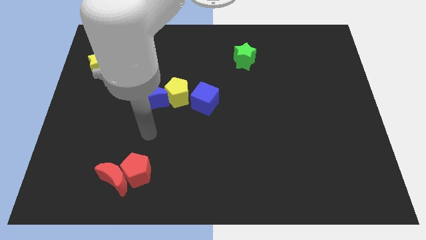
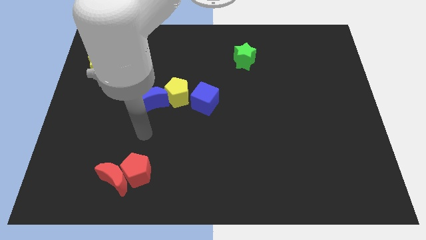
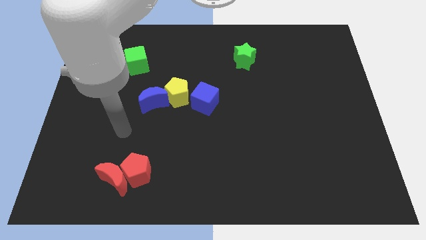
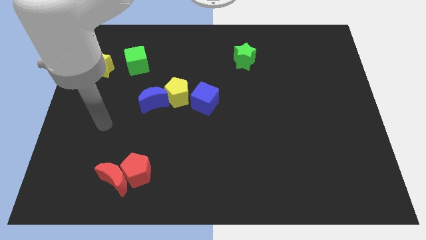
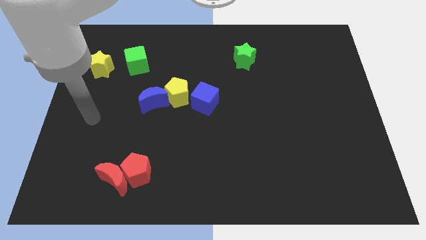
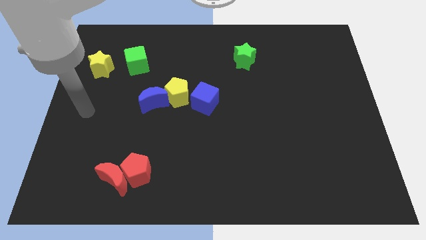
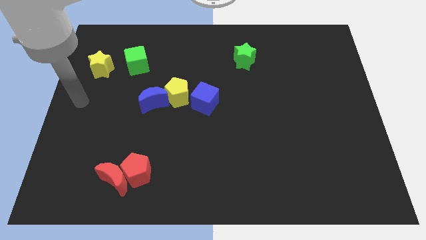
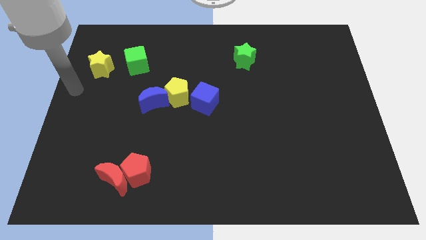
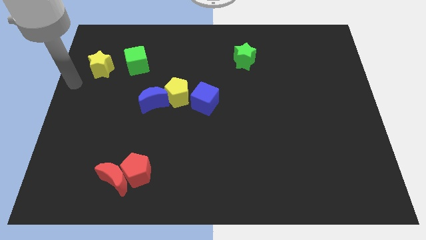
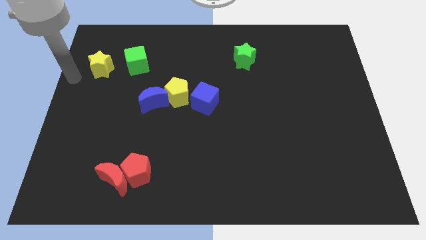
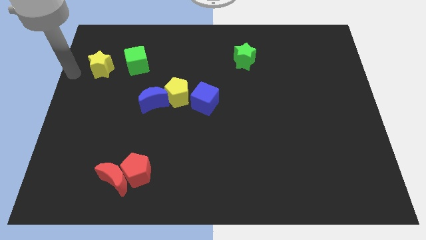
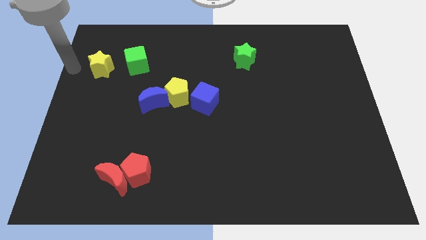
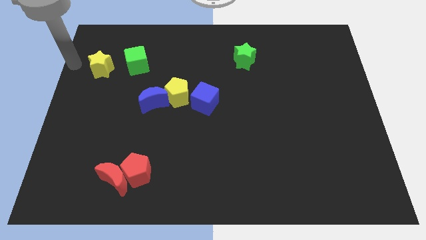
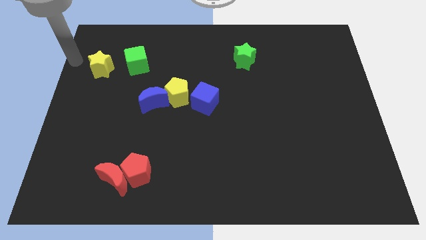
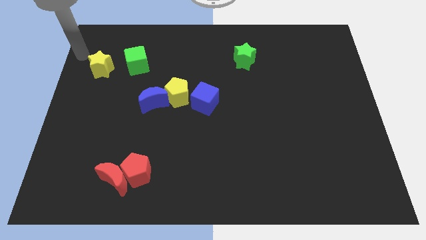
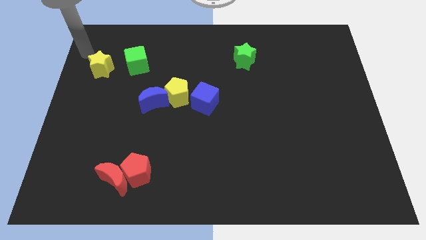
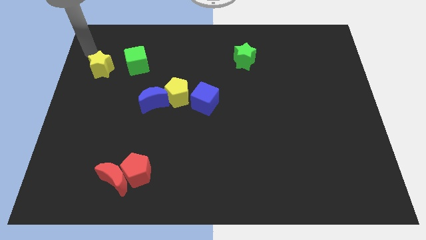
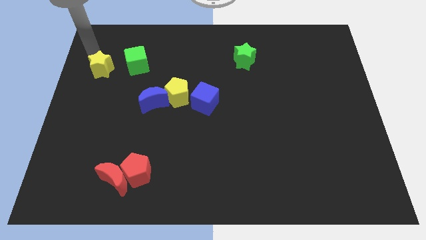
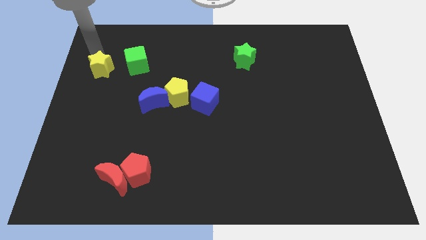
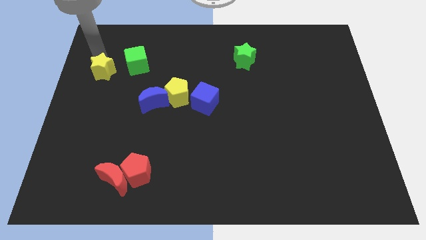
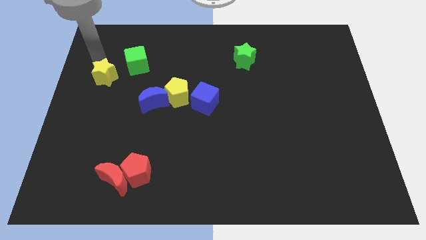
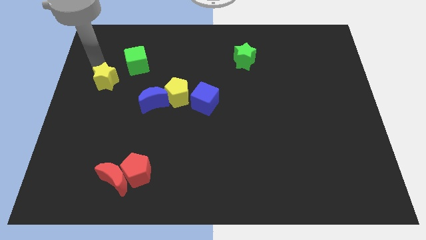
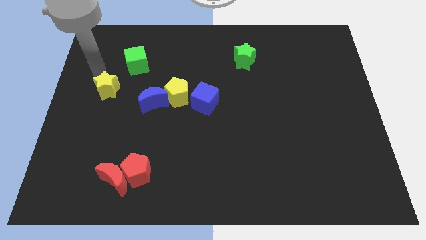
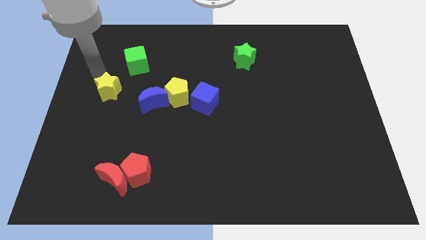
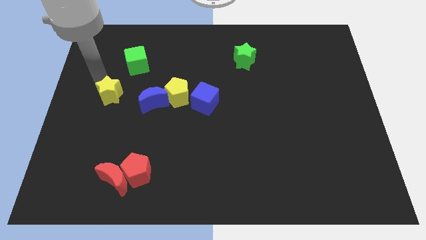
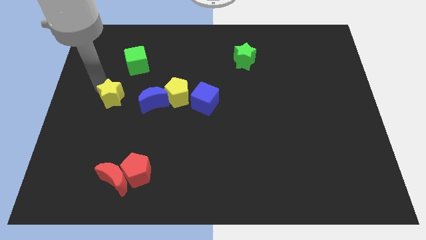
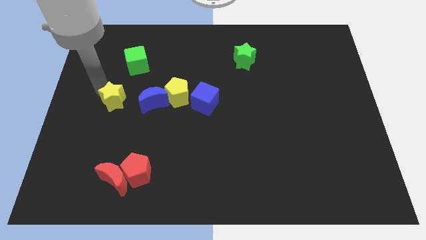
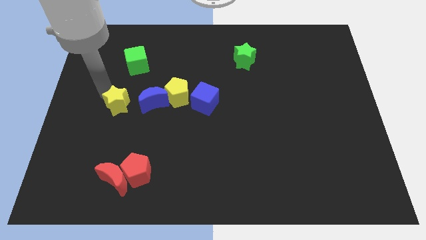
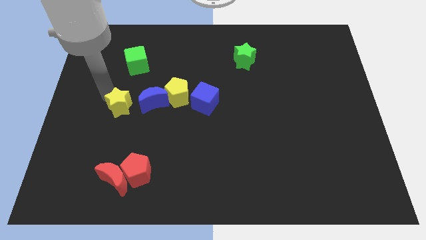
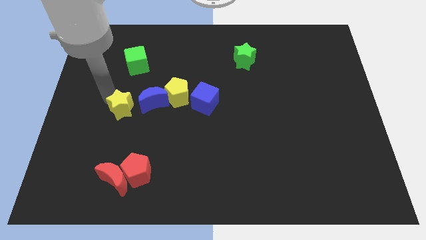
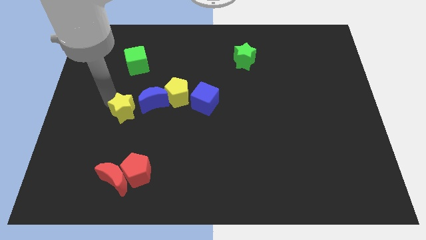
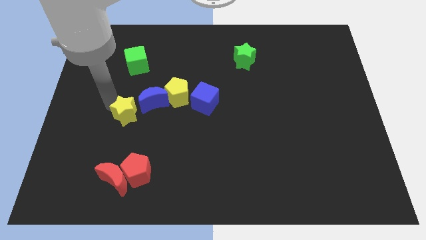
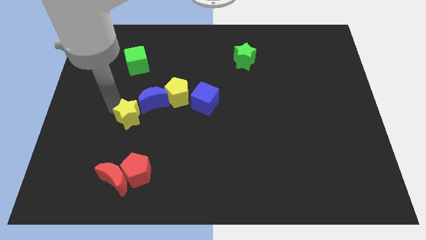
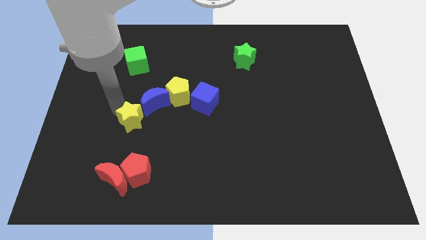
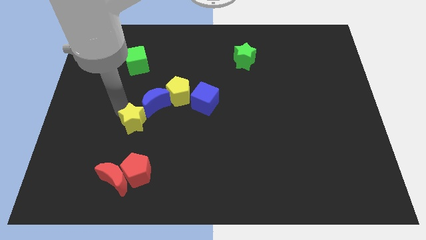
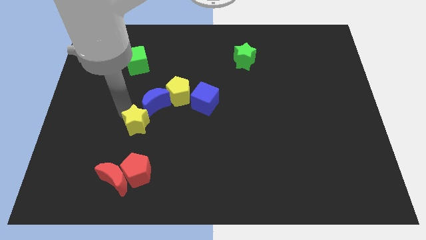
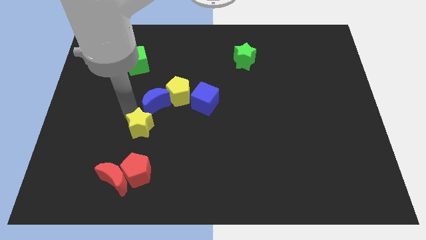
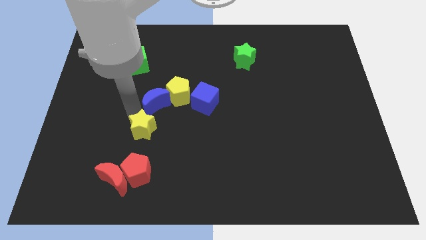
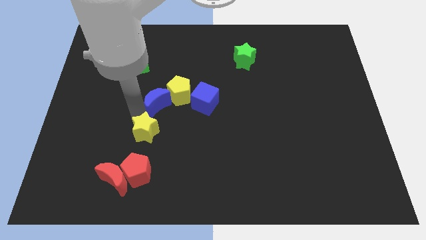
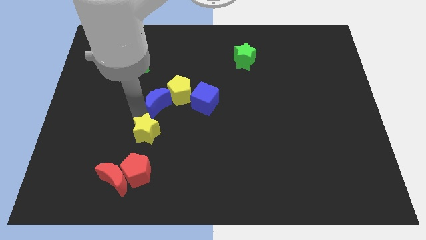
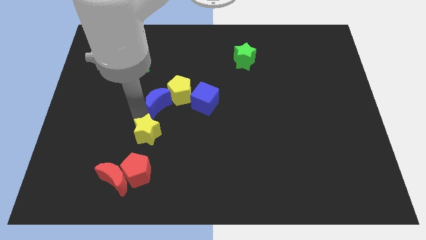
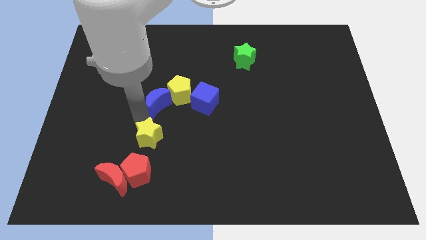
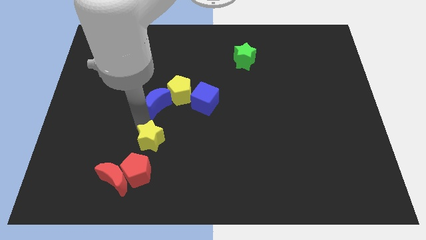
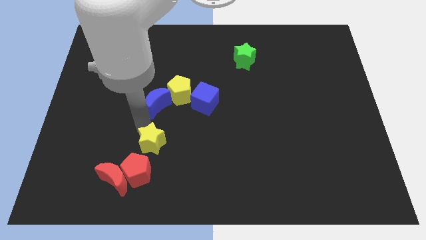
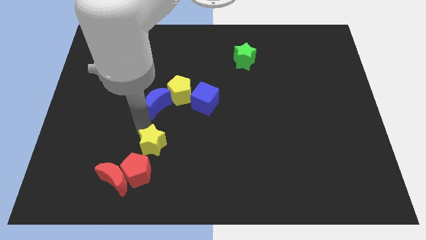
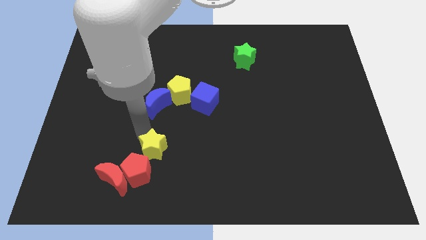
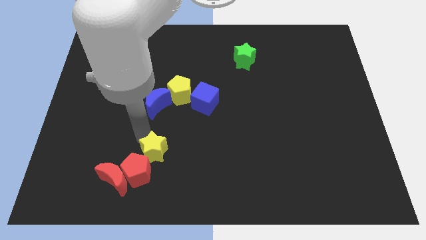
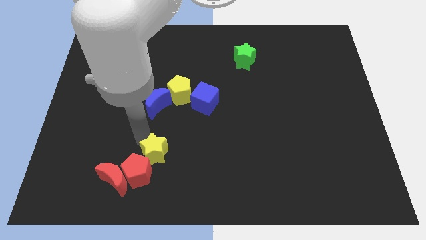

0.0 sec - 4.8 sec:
move the yellow star next to the red pentagon

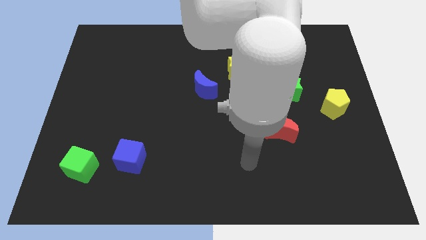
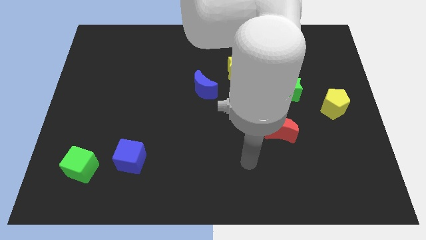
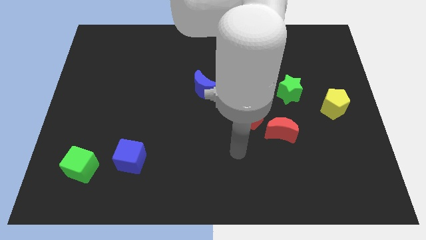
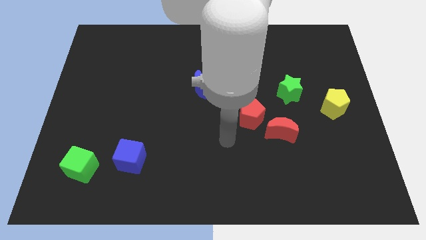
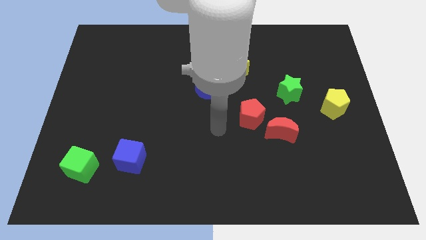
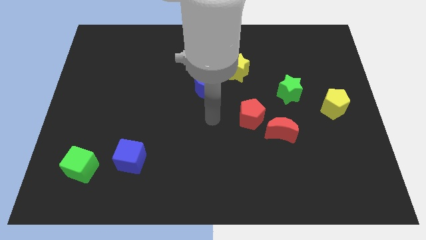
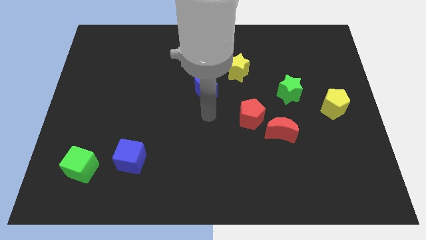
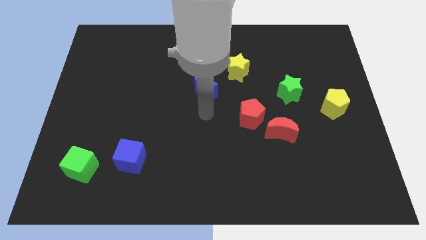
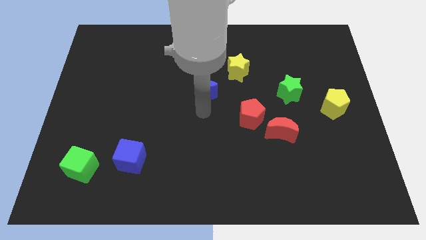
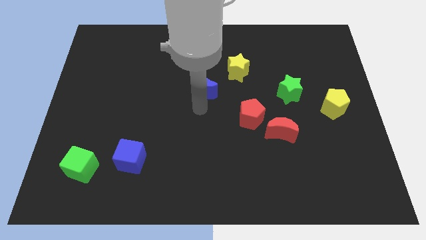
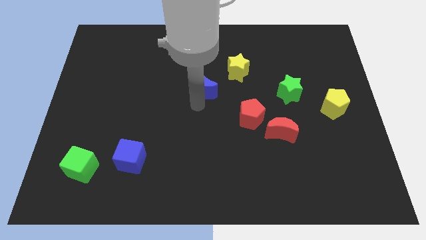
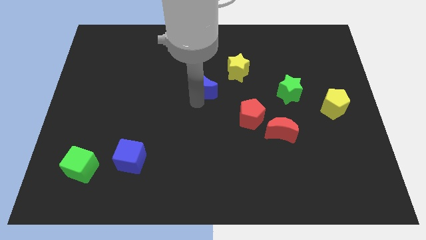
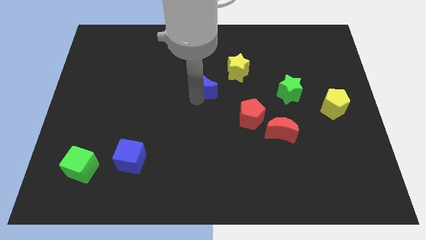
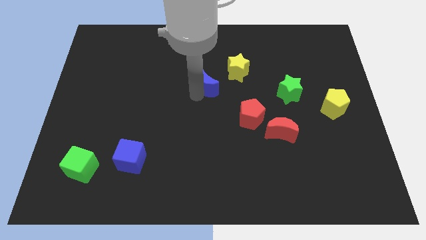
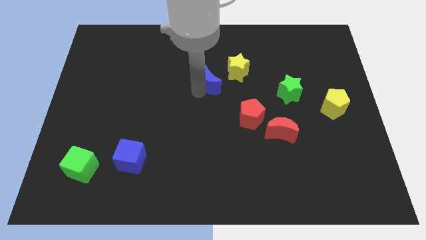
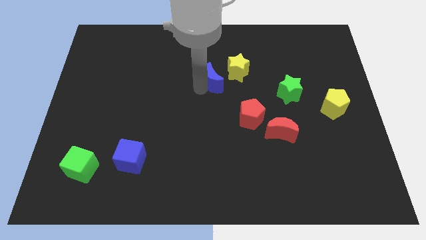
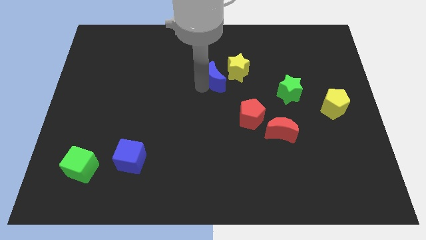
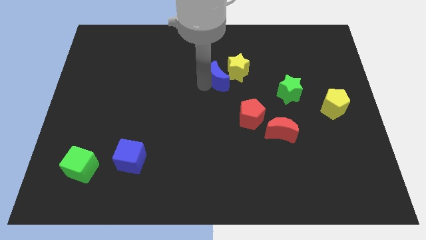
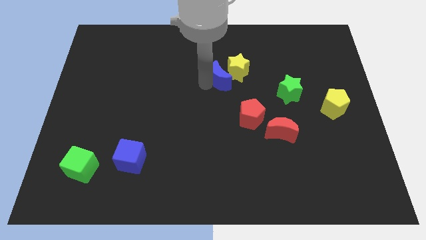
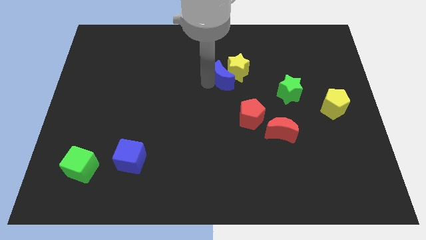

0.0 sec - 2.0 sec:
put the blue moon next to the yellow star

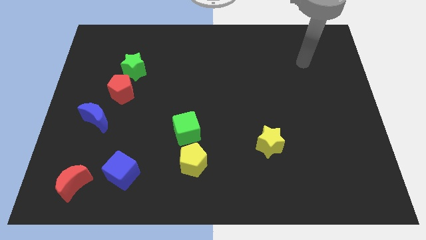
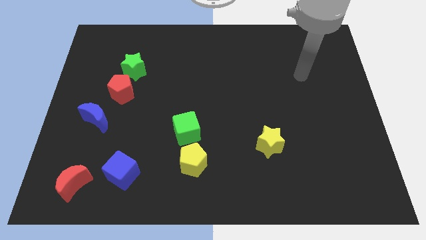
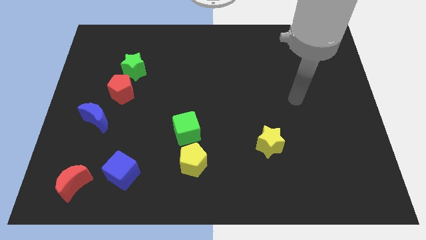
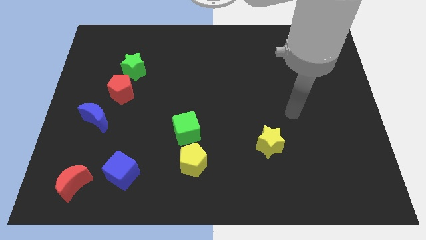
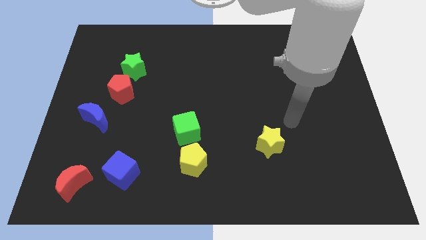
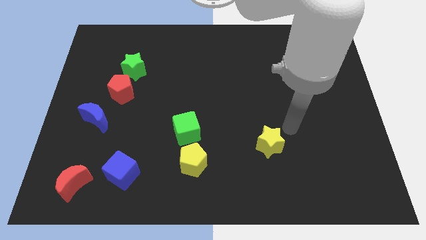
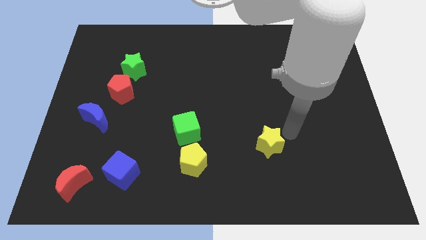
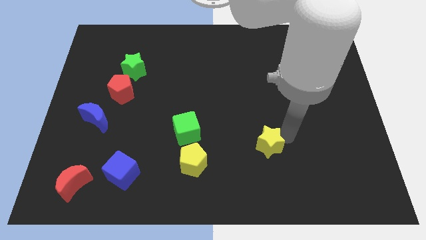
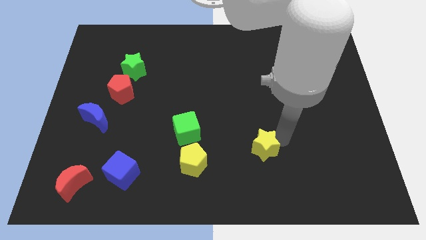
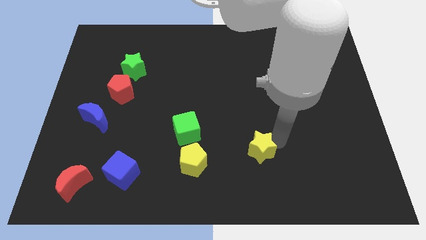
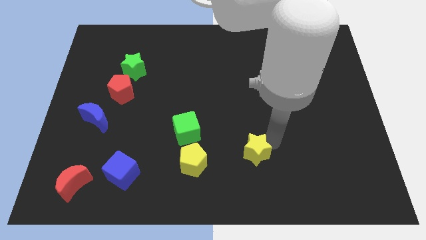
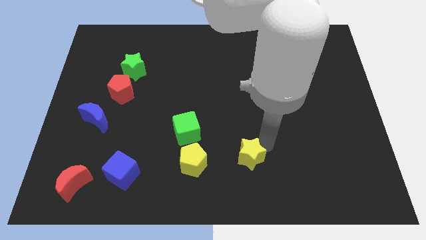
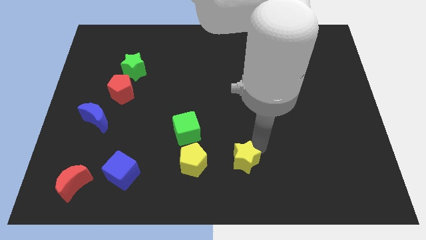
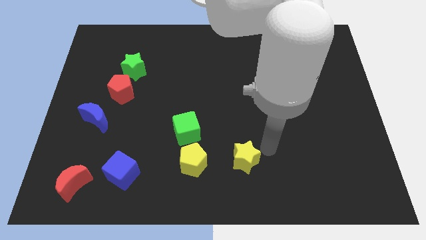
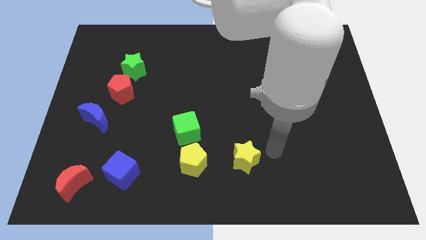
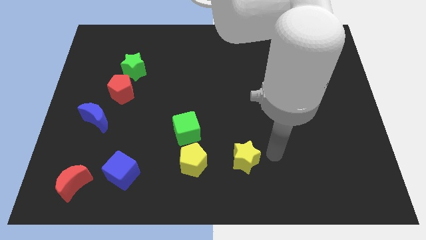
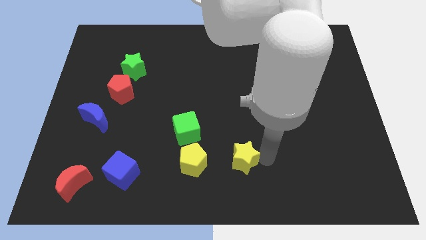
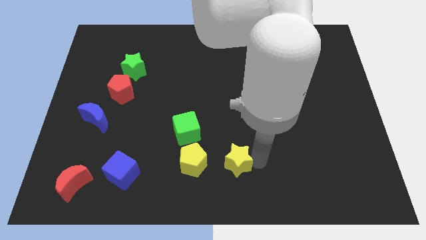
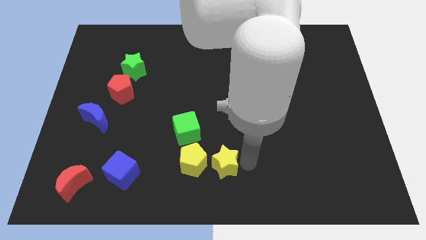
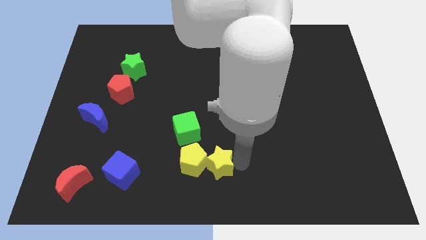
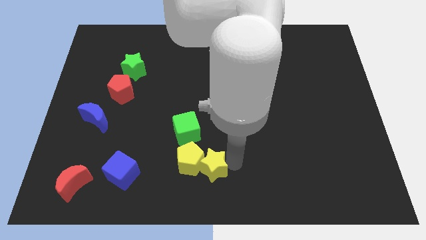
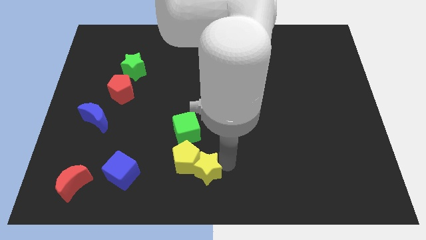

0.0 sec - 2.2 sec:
put the yellow star next to the yellow pentagon
